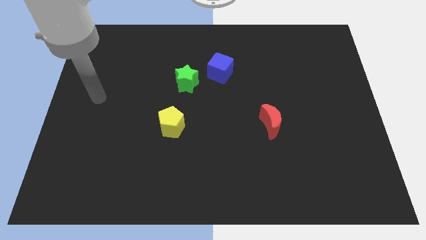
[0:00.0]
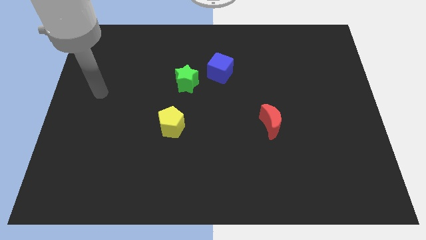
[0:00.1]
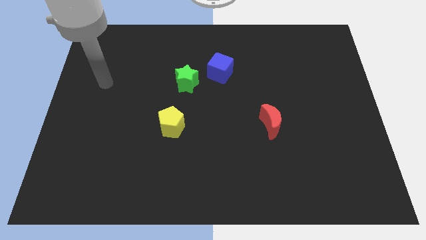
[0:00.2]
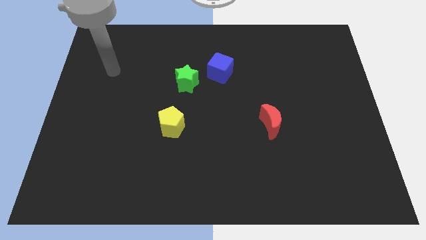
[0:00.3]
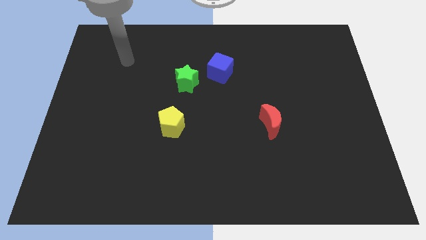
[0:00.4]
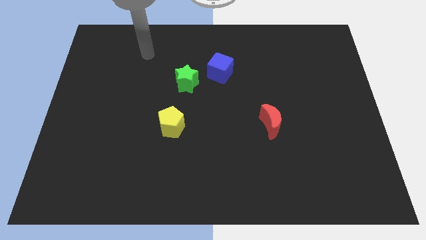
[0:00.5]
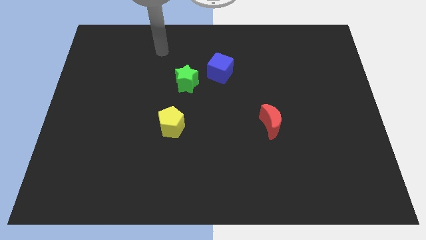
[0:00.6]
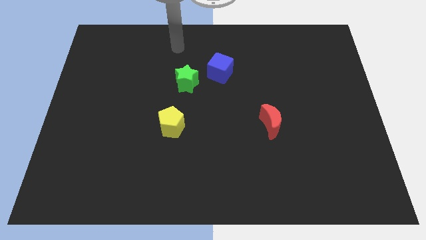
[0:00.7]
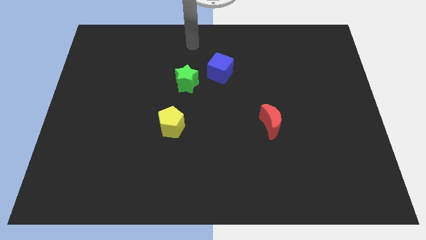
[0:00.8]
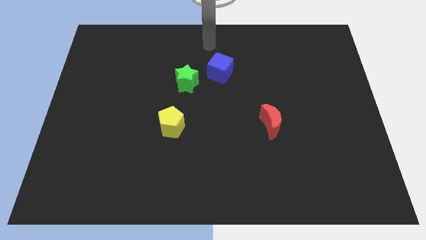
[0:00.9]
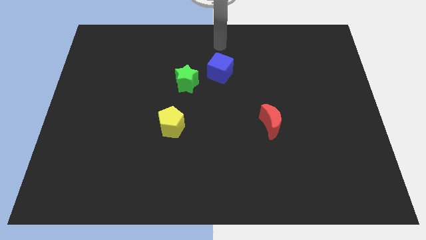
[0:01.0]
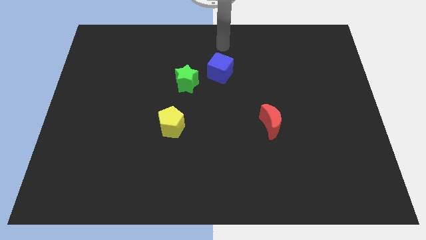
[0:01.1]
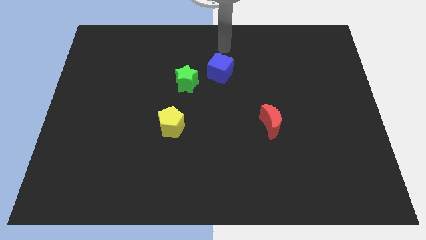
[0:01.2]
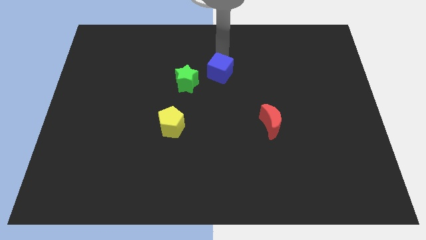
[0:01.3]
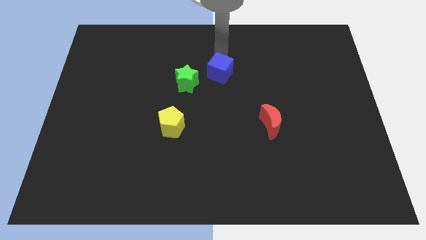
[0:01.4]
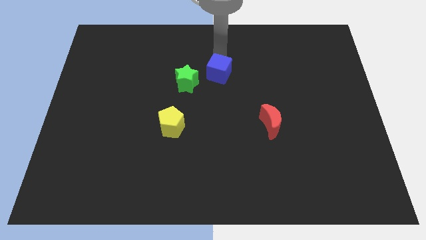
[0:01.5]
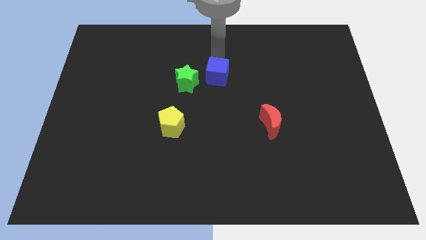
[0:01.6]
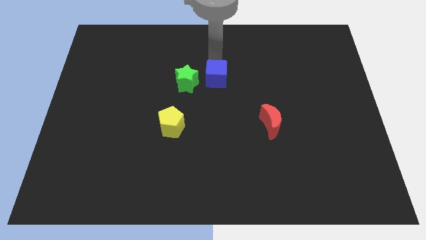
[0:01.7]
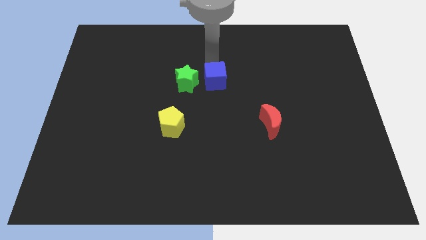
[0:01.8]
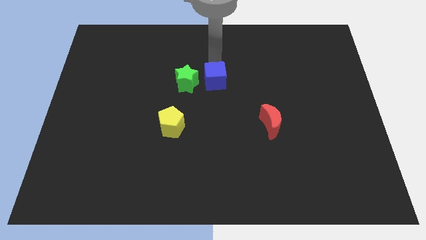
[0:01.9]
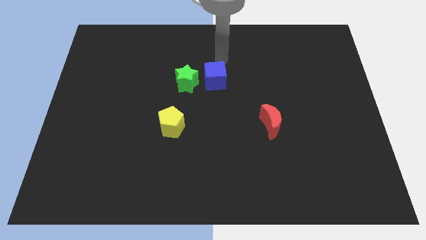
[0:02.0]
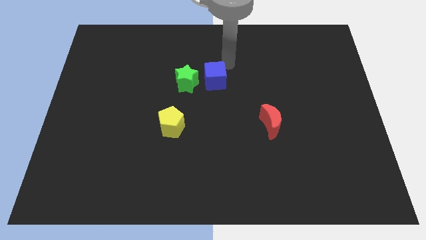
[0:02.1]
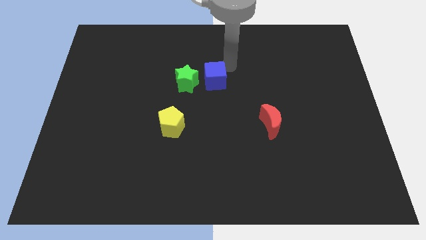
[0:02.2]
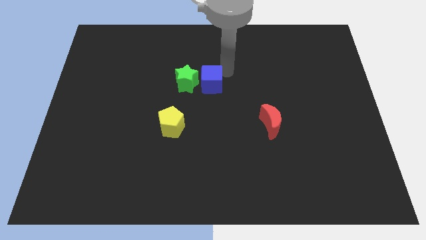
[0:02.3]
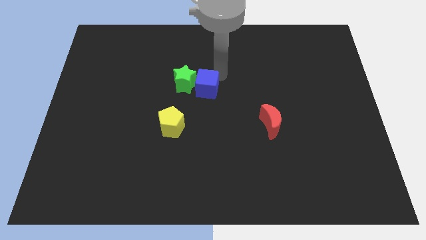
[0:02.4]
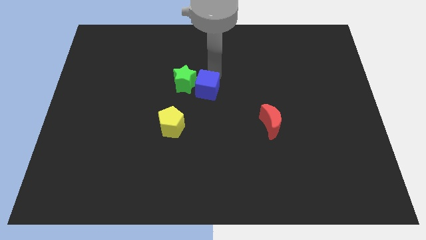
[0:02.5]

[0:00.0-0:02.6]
push the blue block to the green star

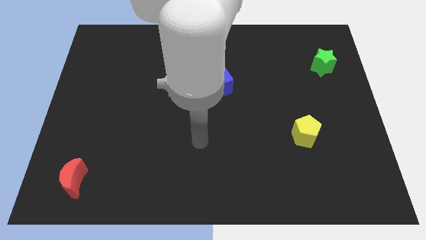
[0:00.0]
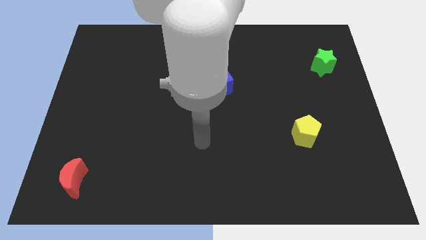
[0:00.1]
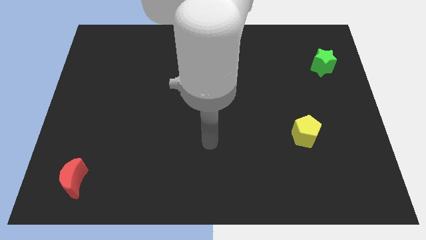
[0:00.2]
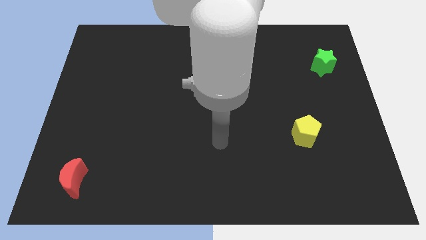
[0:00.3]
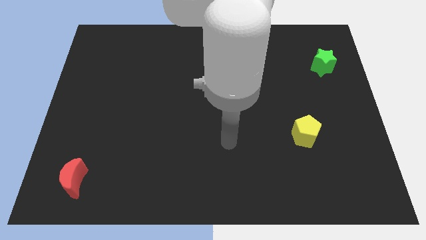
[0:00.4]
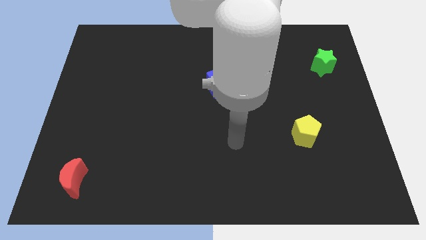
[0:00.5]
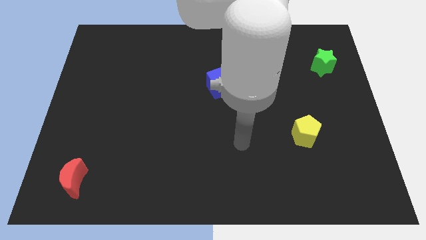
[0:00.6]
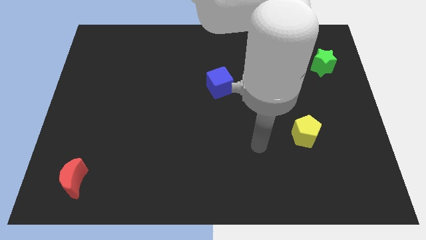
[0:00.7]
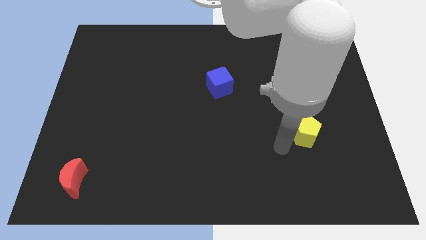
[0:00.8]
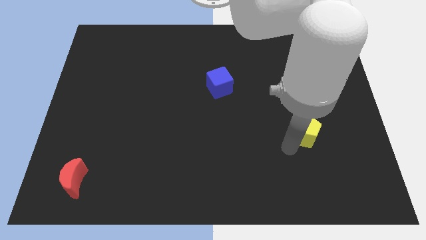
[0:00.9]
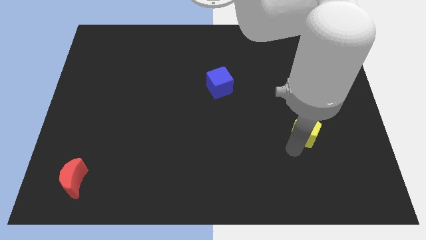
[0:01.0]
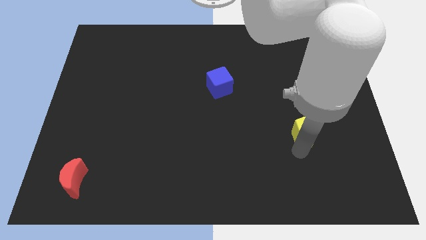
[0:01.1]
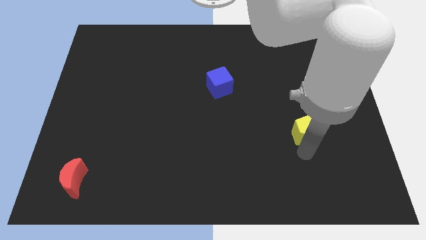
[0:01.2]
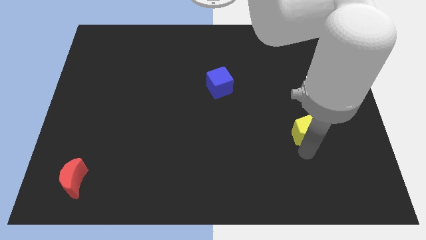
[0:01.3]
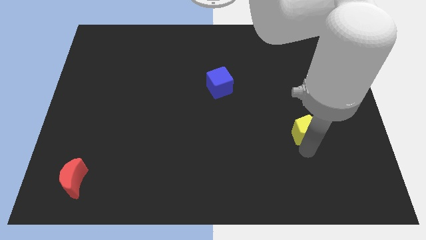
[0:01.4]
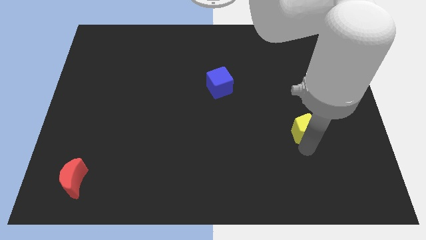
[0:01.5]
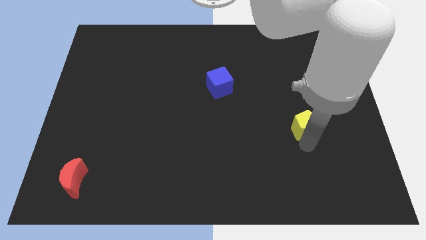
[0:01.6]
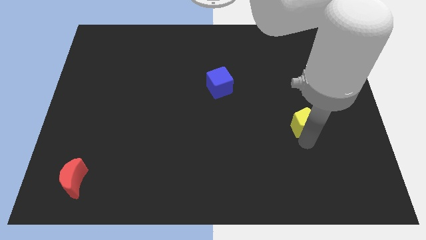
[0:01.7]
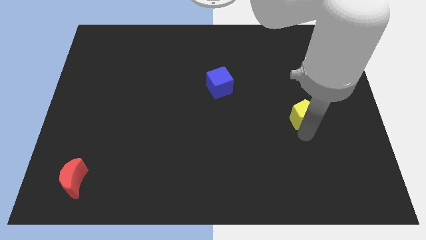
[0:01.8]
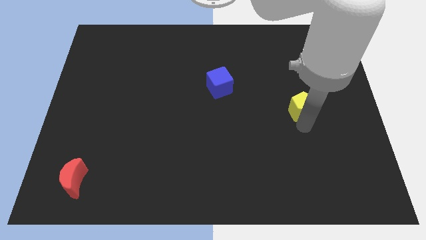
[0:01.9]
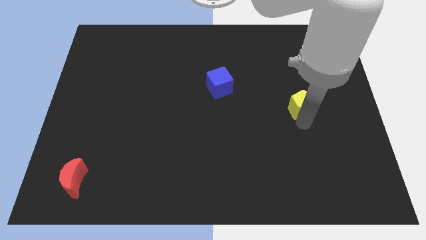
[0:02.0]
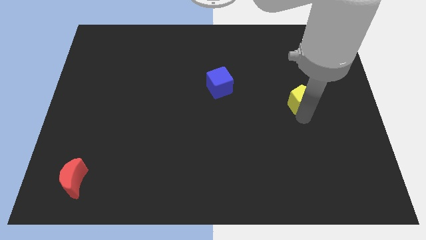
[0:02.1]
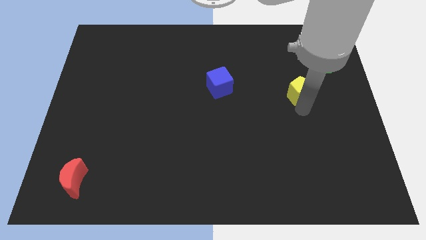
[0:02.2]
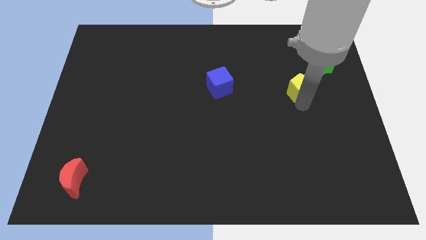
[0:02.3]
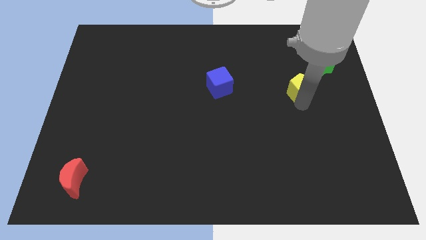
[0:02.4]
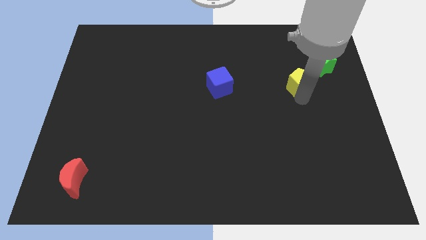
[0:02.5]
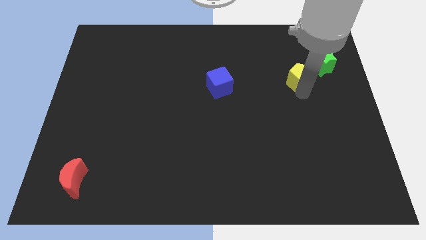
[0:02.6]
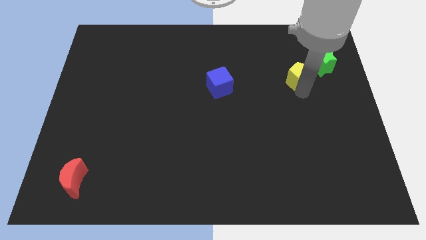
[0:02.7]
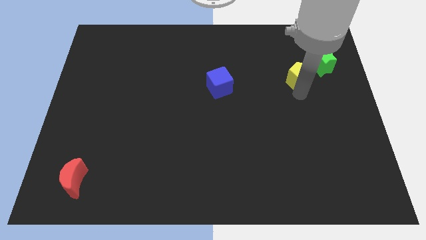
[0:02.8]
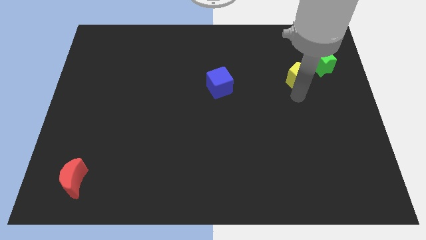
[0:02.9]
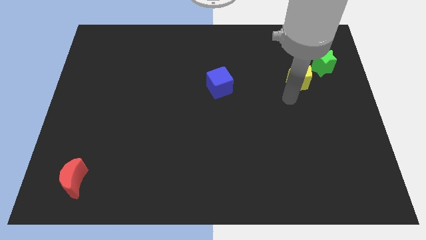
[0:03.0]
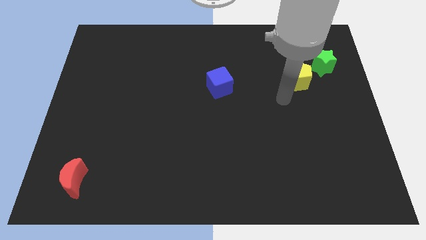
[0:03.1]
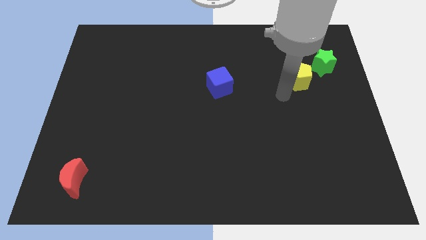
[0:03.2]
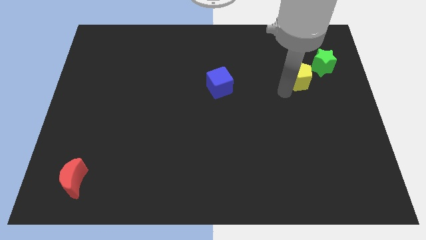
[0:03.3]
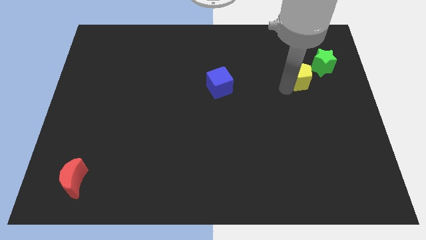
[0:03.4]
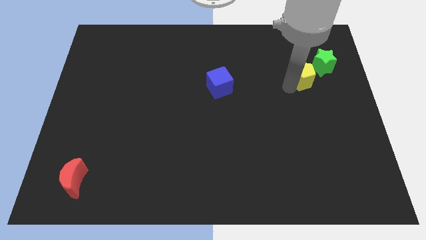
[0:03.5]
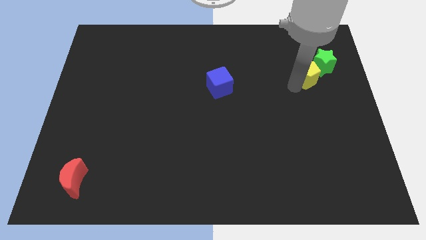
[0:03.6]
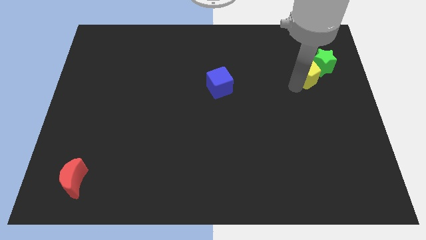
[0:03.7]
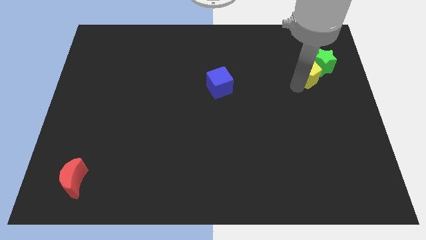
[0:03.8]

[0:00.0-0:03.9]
put the yellow pentagon next to the green star

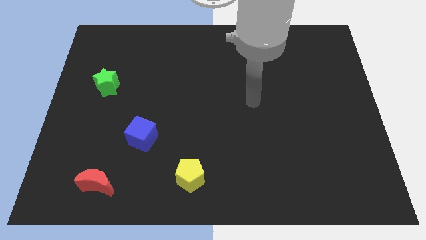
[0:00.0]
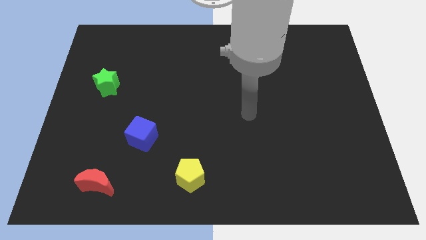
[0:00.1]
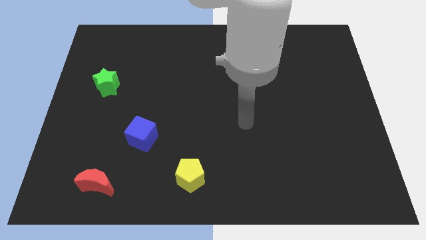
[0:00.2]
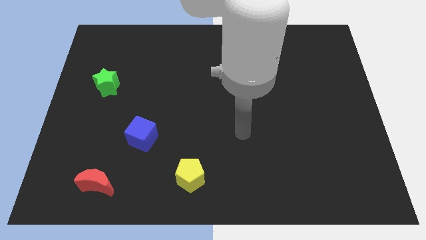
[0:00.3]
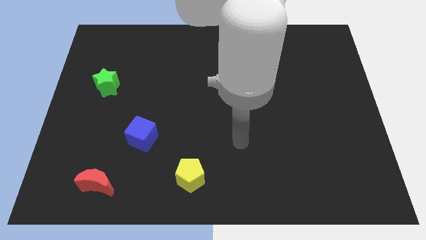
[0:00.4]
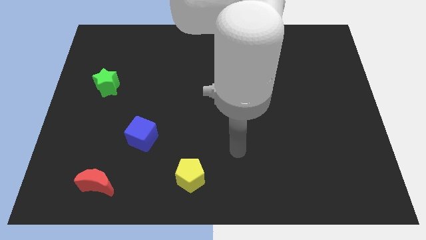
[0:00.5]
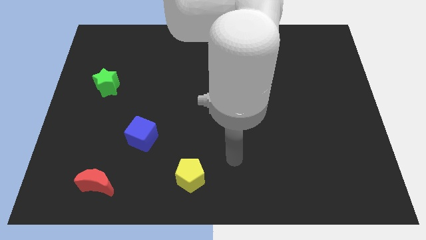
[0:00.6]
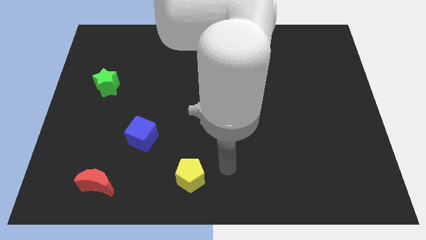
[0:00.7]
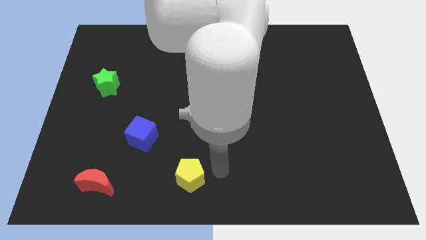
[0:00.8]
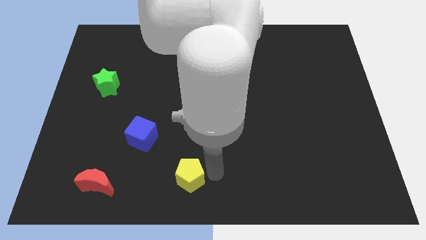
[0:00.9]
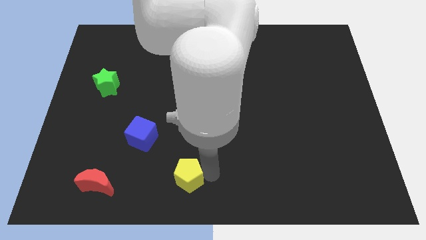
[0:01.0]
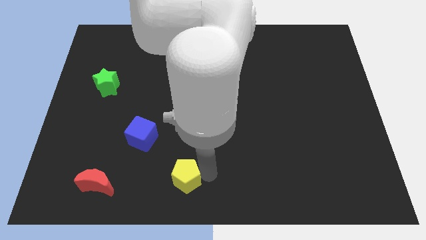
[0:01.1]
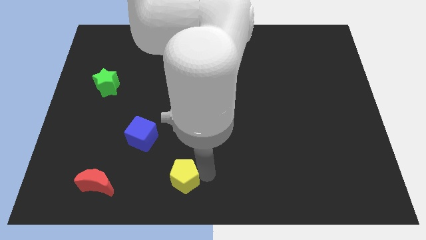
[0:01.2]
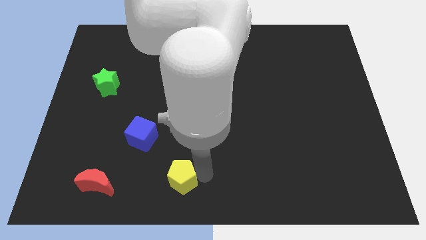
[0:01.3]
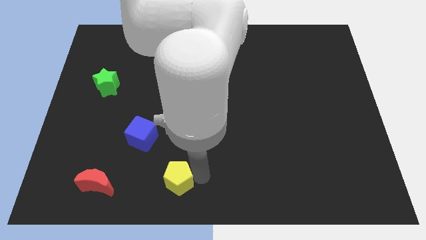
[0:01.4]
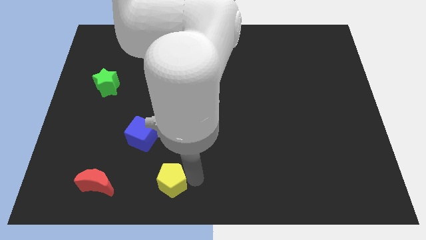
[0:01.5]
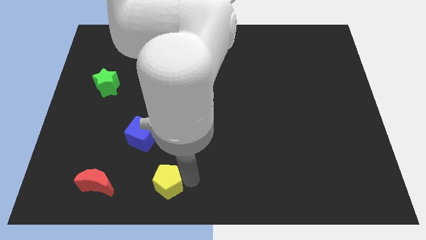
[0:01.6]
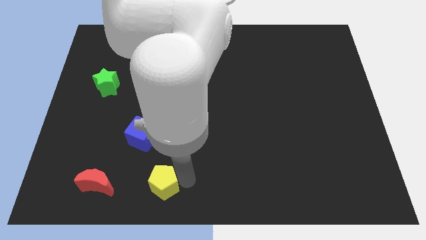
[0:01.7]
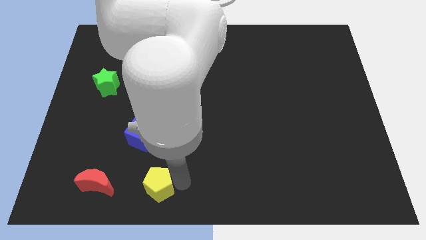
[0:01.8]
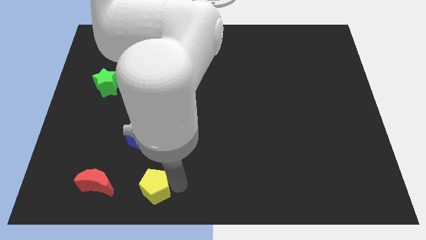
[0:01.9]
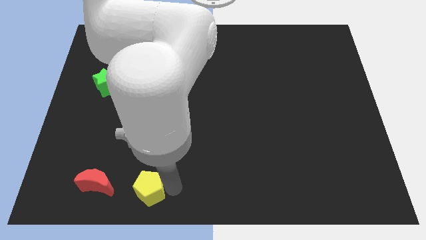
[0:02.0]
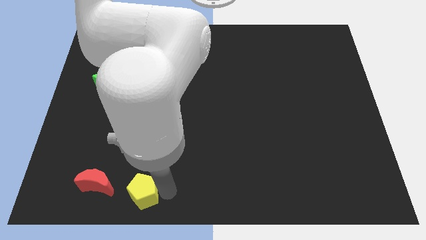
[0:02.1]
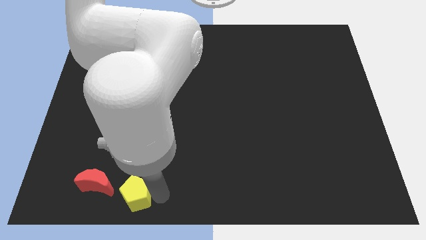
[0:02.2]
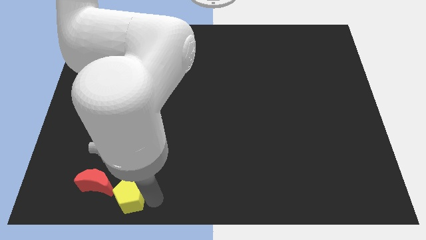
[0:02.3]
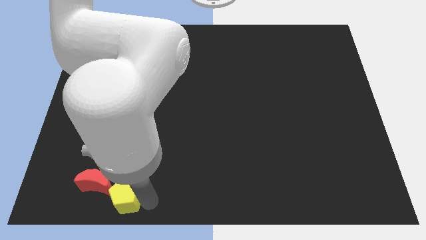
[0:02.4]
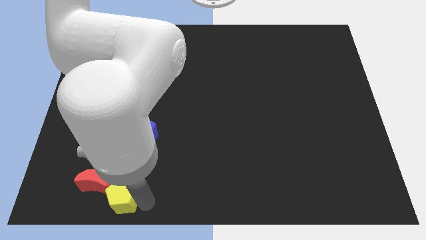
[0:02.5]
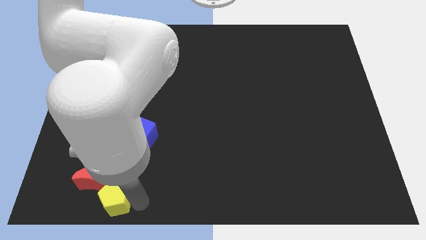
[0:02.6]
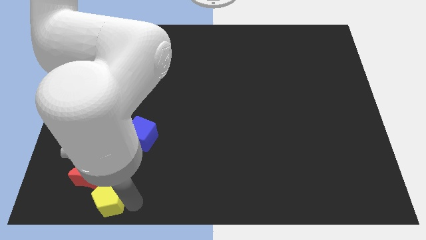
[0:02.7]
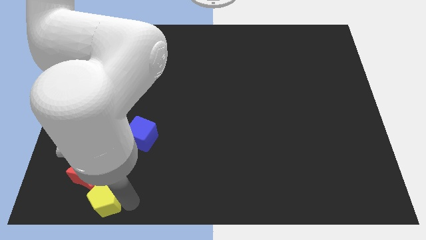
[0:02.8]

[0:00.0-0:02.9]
slide the yellow block to the moon
